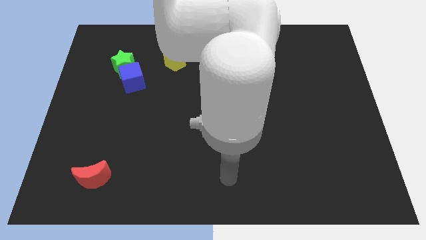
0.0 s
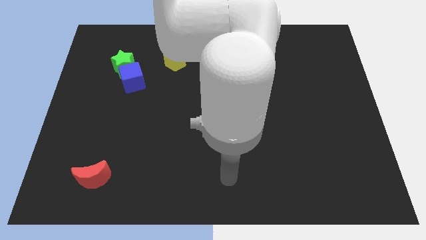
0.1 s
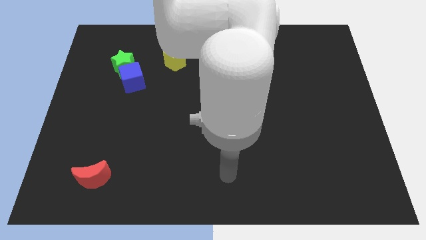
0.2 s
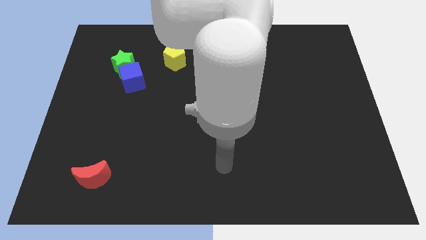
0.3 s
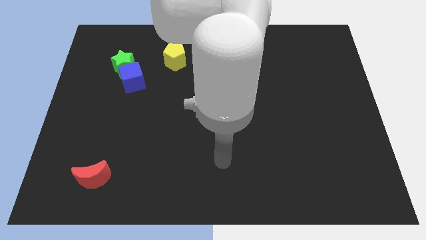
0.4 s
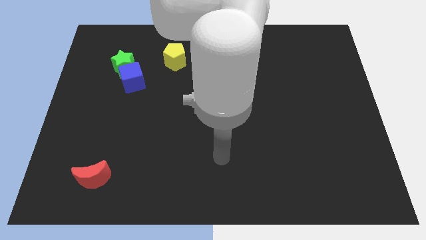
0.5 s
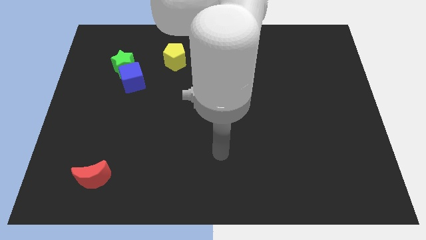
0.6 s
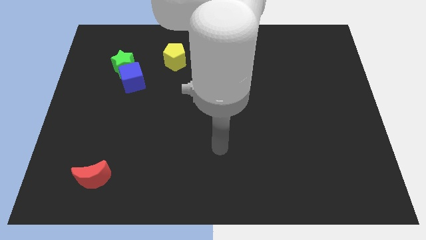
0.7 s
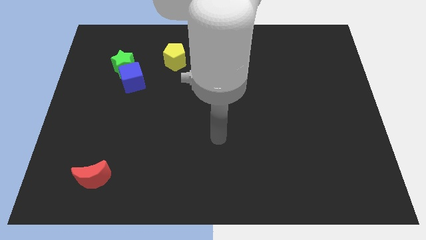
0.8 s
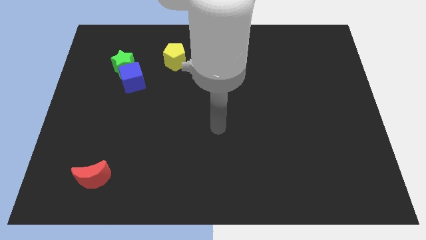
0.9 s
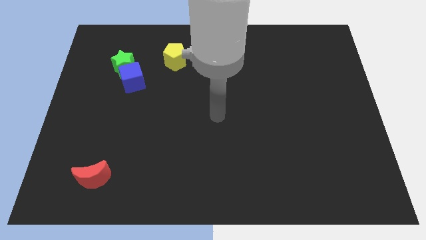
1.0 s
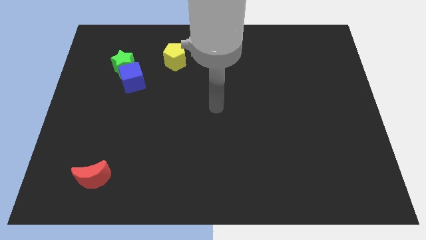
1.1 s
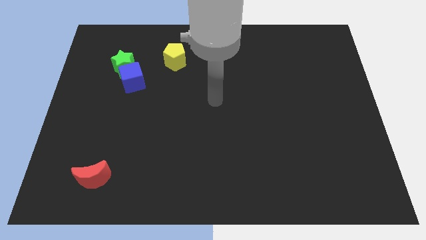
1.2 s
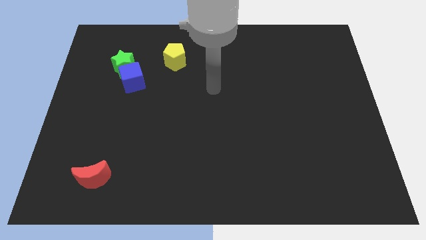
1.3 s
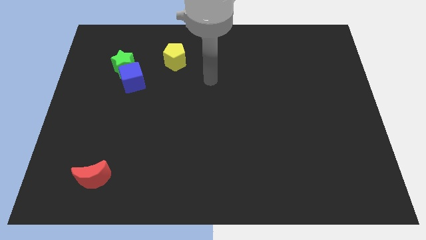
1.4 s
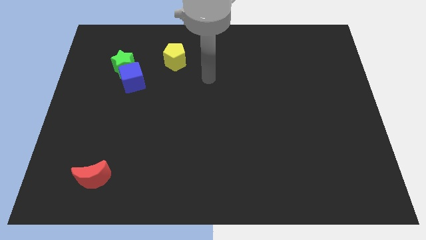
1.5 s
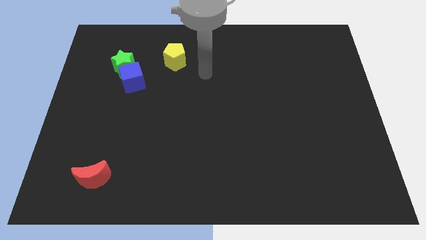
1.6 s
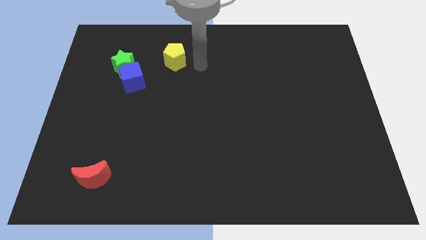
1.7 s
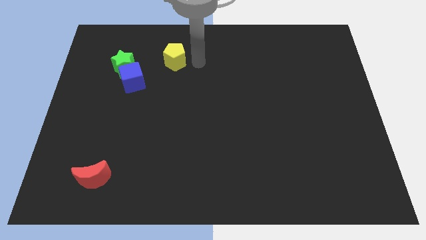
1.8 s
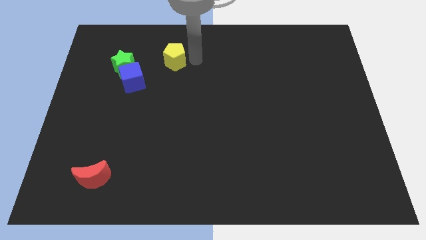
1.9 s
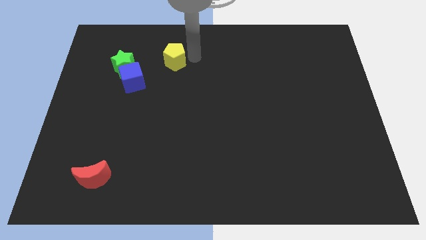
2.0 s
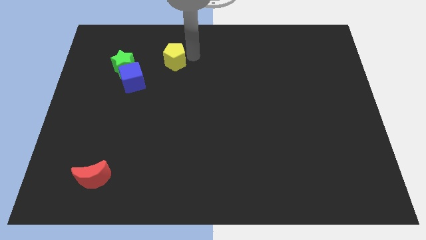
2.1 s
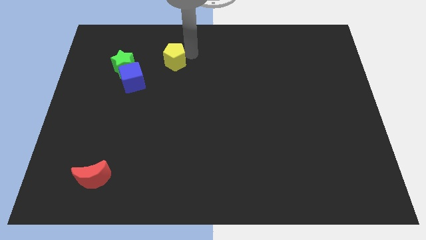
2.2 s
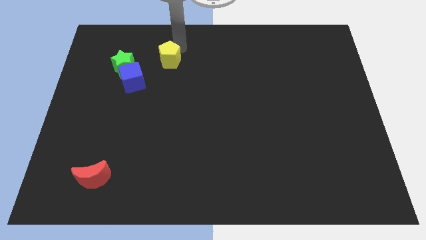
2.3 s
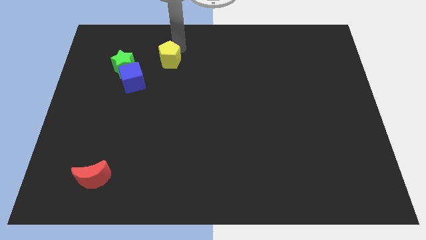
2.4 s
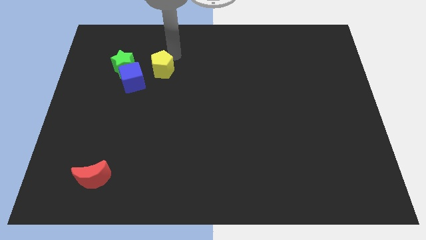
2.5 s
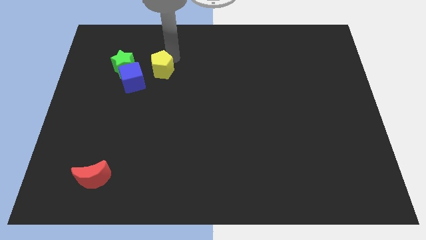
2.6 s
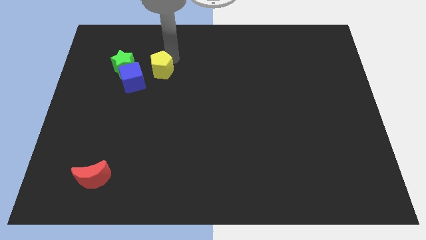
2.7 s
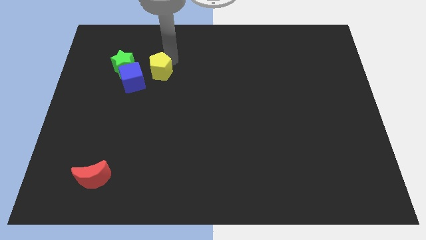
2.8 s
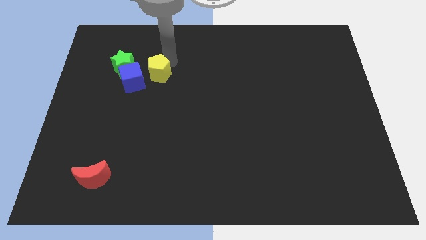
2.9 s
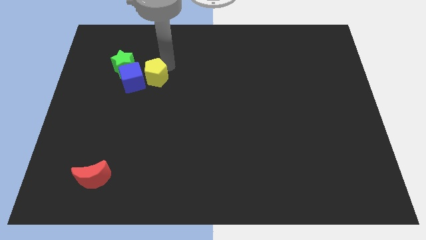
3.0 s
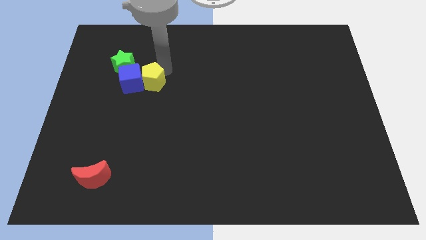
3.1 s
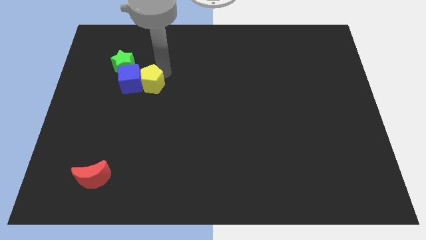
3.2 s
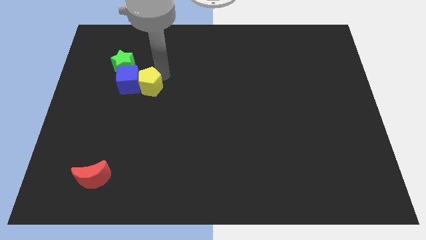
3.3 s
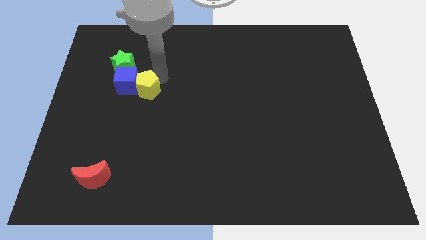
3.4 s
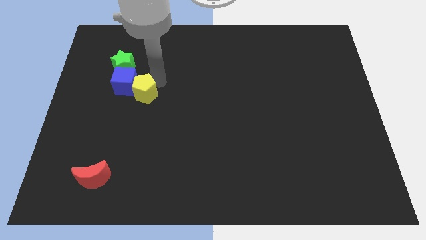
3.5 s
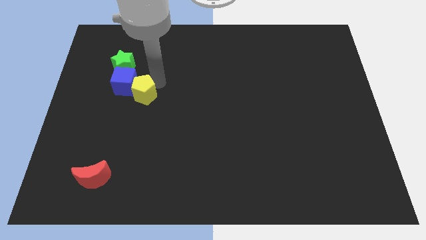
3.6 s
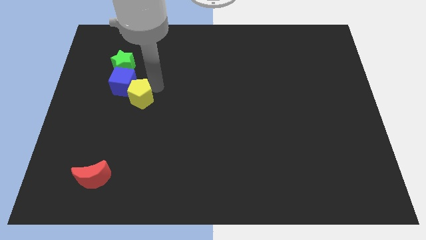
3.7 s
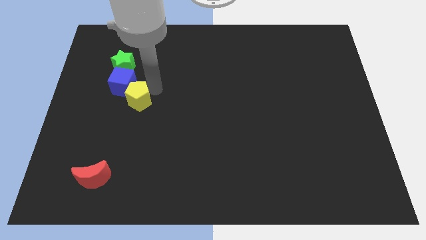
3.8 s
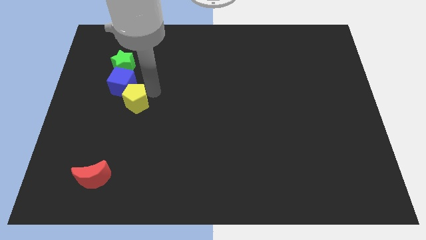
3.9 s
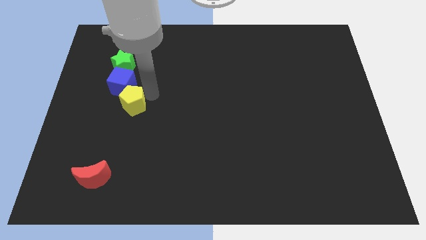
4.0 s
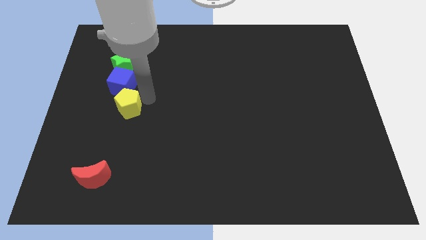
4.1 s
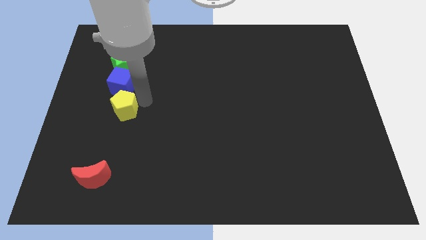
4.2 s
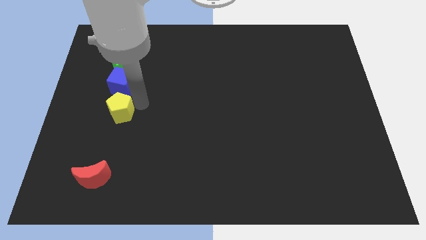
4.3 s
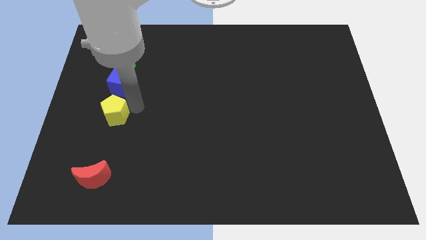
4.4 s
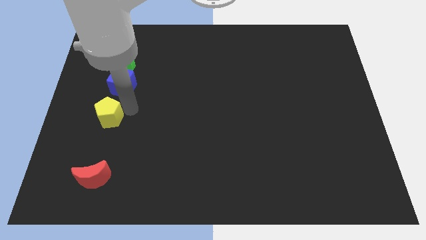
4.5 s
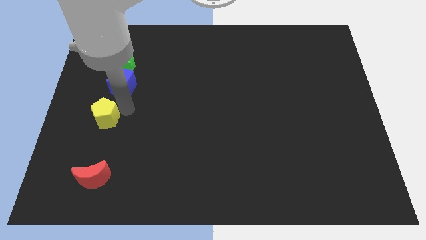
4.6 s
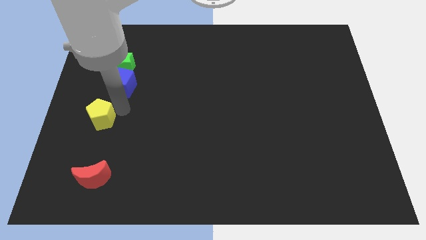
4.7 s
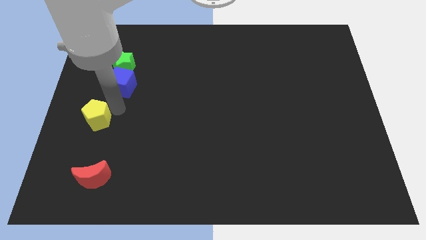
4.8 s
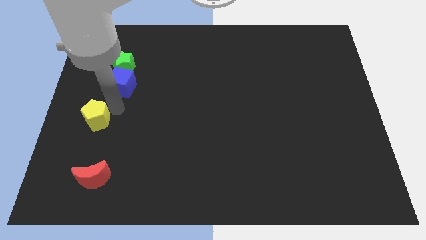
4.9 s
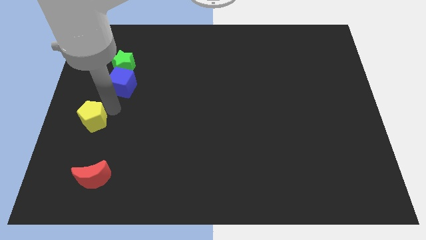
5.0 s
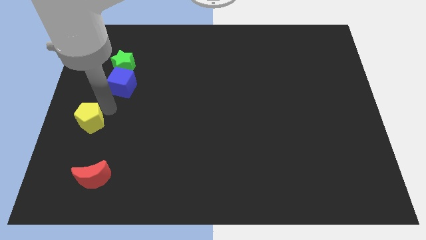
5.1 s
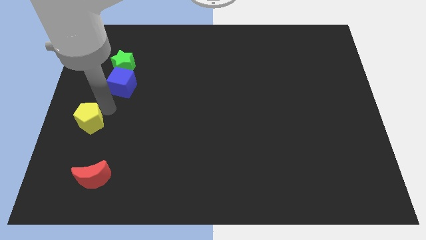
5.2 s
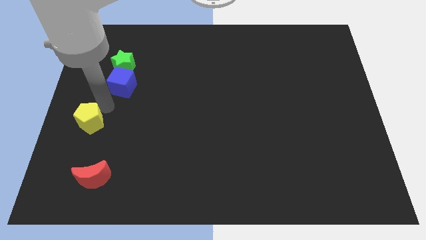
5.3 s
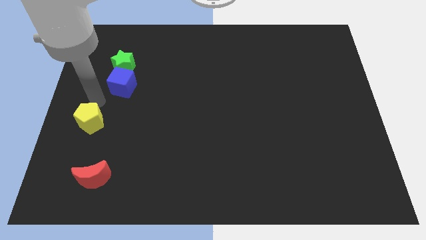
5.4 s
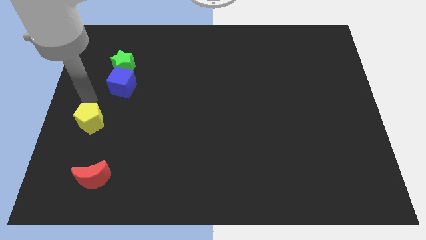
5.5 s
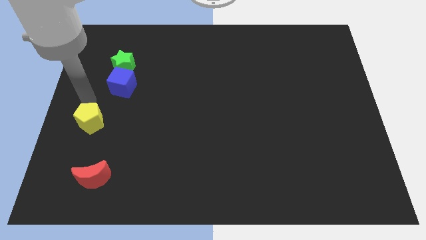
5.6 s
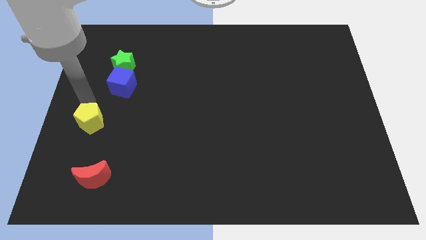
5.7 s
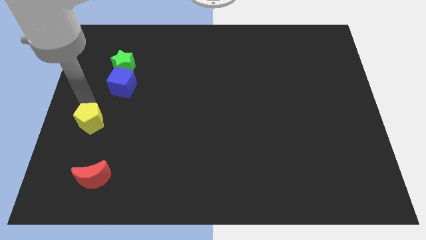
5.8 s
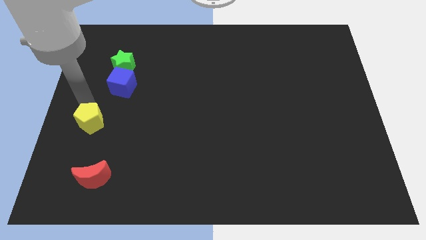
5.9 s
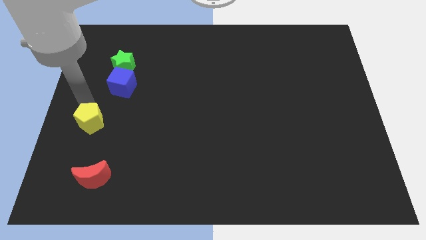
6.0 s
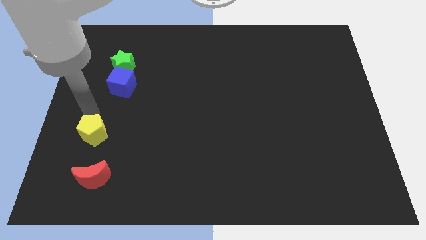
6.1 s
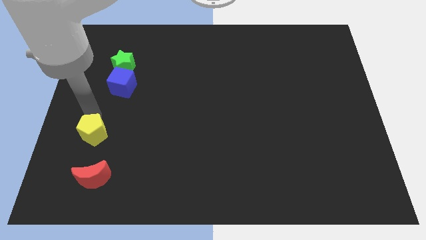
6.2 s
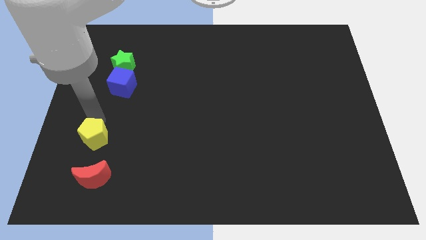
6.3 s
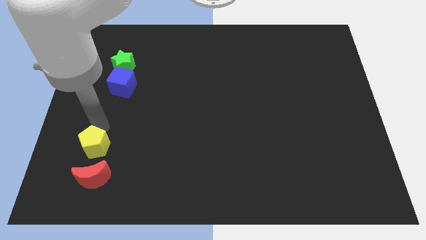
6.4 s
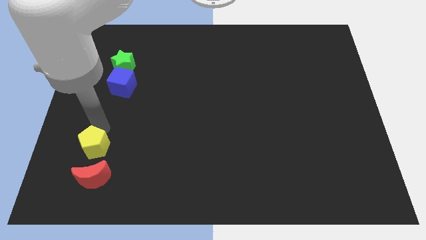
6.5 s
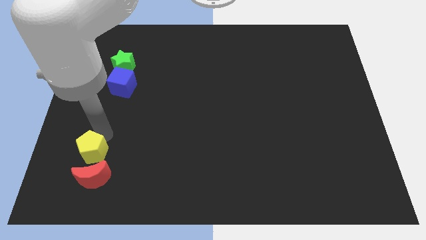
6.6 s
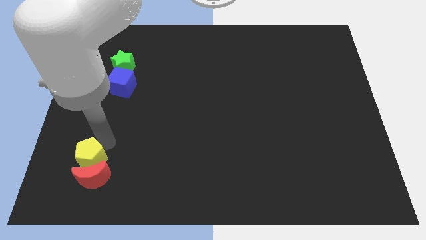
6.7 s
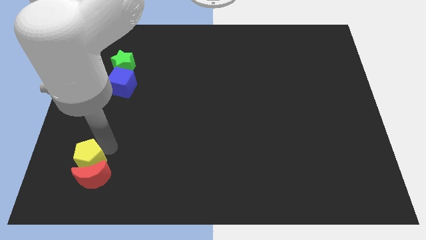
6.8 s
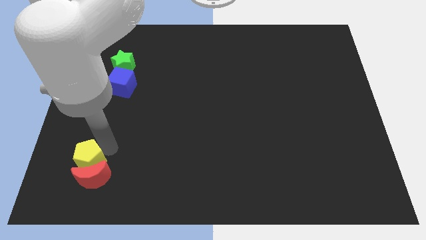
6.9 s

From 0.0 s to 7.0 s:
put the pentagon next to the moon

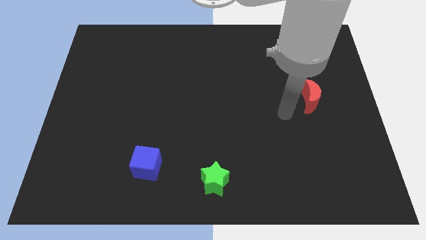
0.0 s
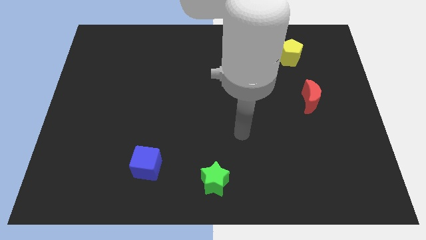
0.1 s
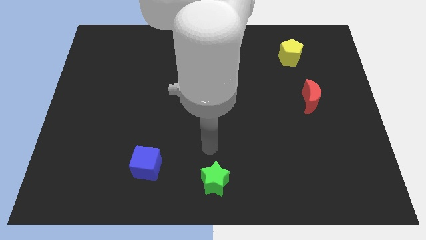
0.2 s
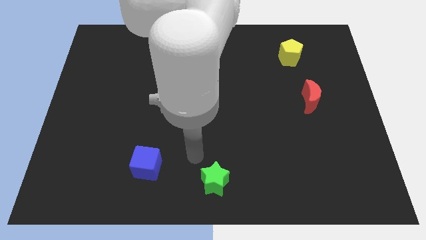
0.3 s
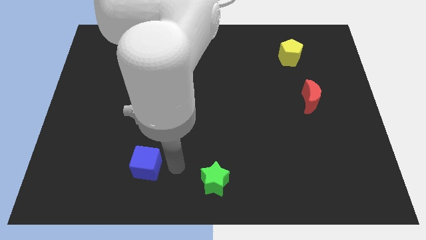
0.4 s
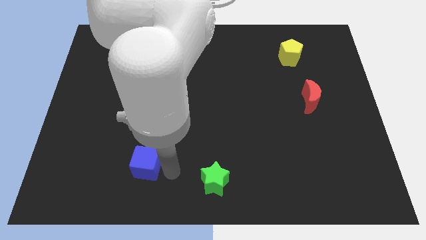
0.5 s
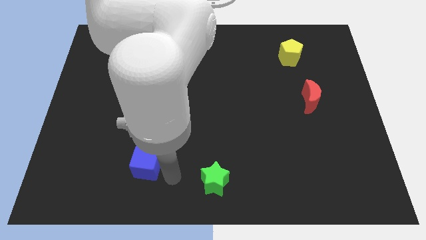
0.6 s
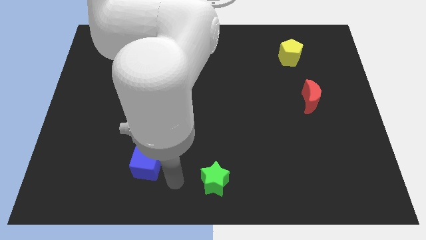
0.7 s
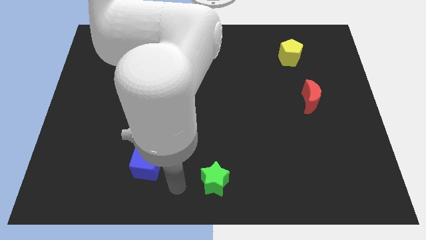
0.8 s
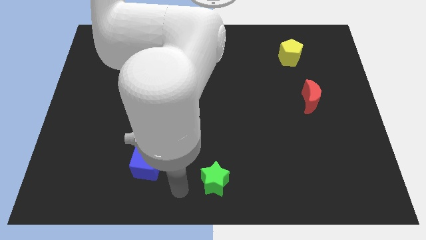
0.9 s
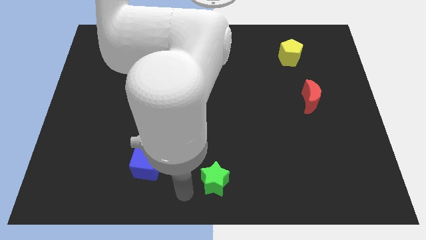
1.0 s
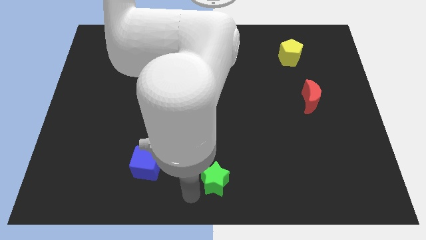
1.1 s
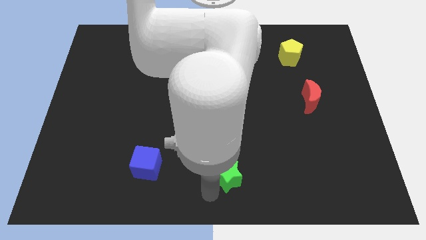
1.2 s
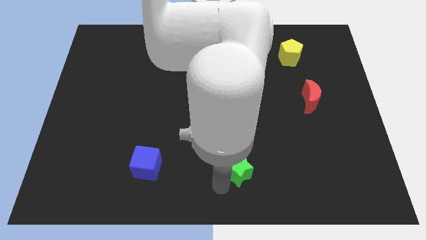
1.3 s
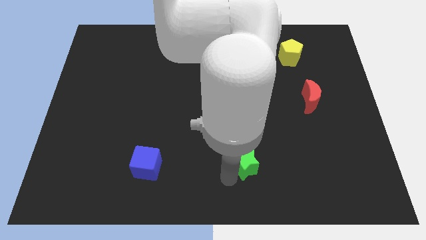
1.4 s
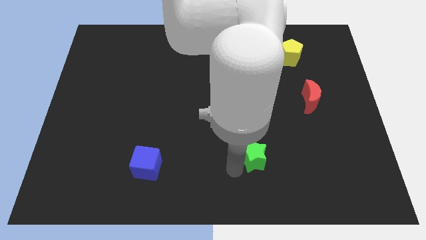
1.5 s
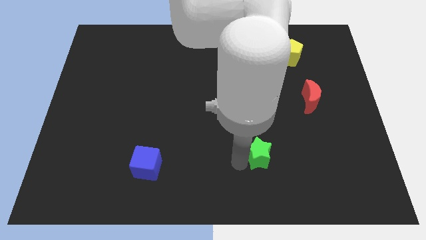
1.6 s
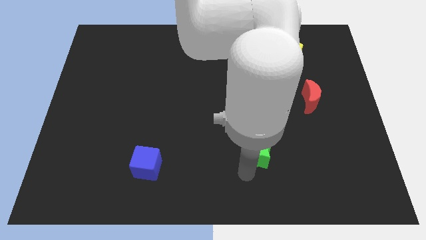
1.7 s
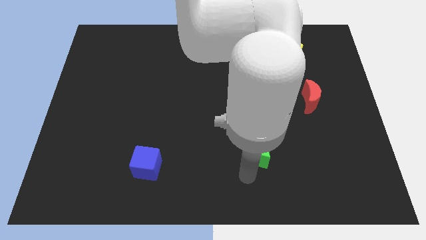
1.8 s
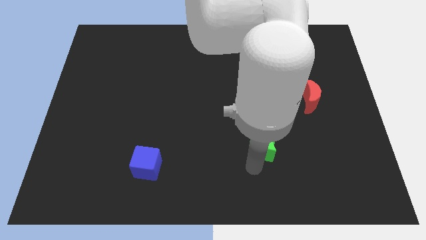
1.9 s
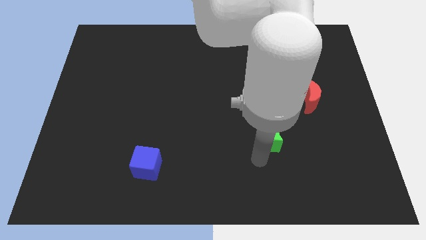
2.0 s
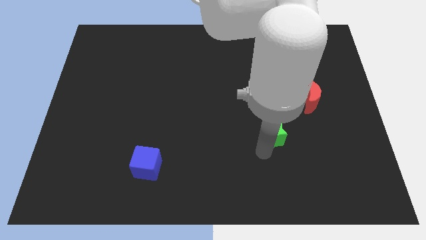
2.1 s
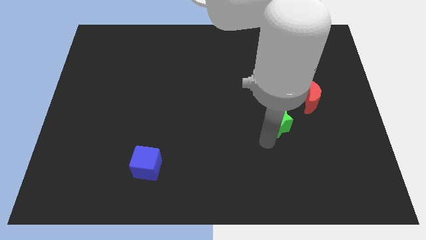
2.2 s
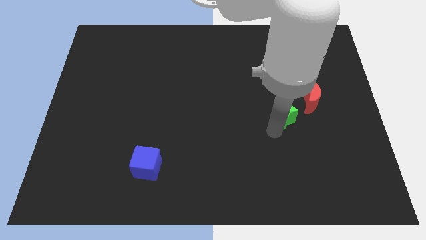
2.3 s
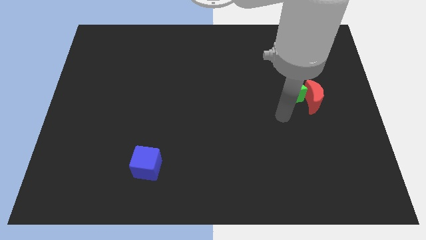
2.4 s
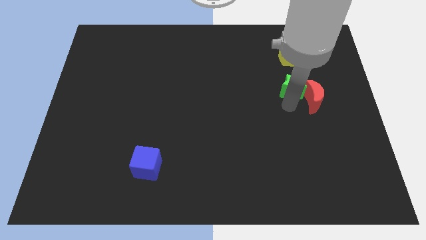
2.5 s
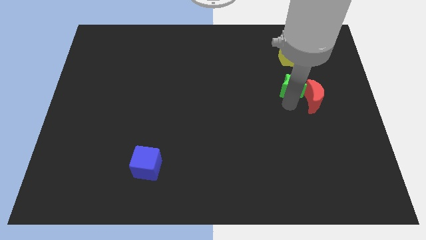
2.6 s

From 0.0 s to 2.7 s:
slide the green block close to the red moon
